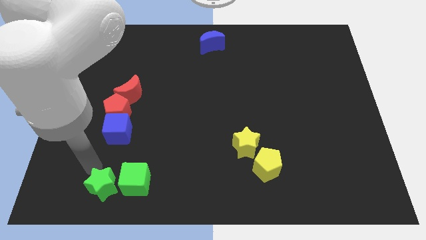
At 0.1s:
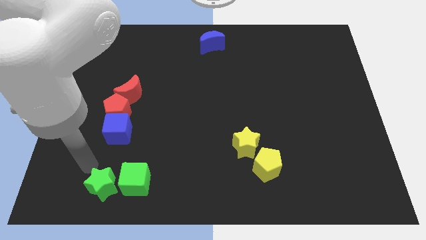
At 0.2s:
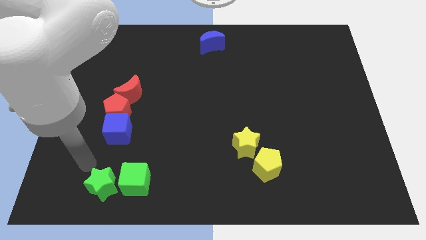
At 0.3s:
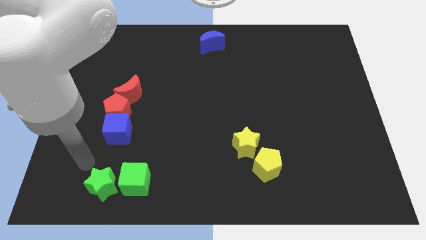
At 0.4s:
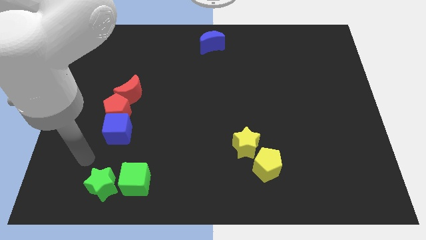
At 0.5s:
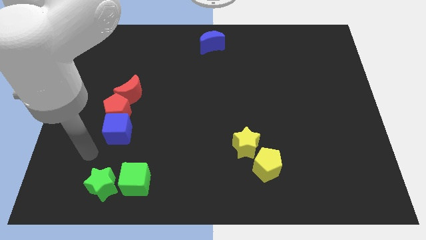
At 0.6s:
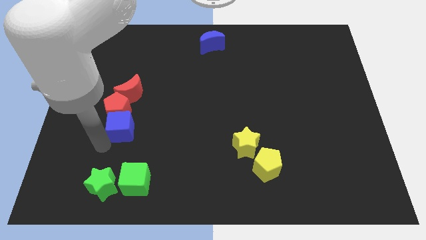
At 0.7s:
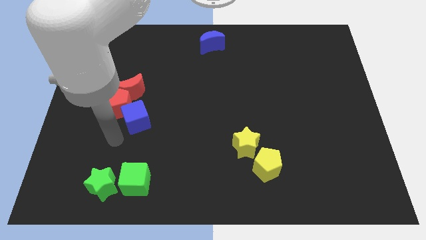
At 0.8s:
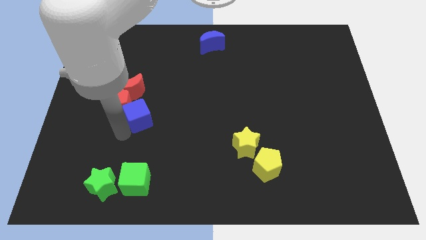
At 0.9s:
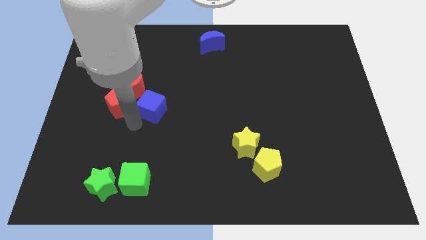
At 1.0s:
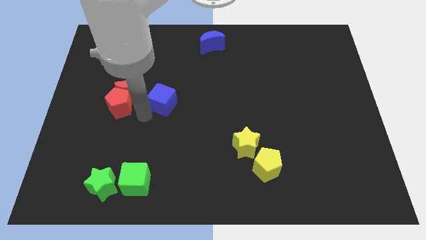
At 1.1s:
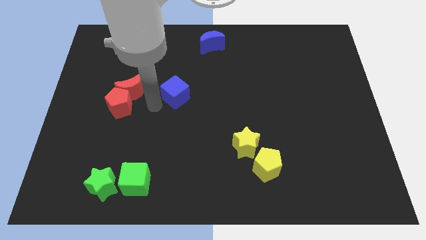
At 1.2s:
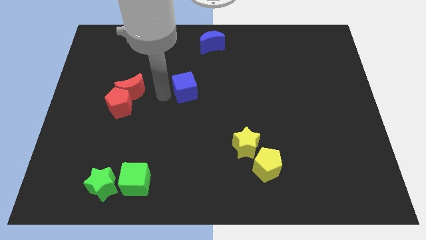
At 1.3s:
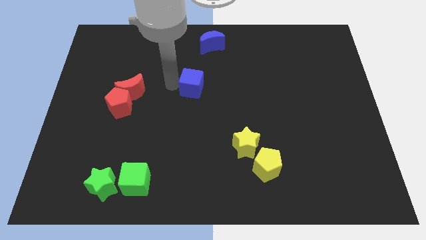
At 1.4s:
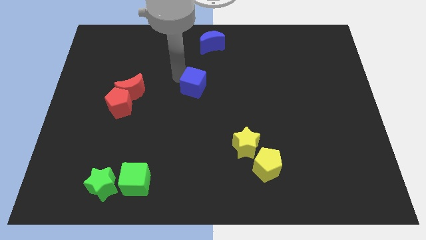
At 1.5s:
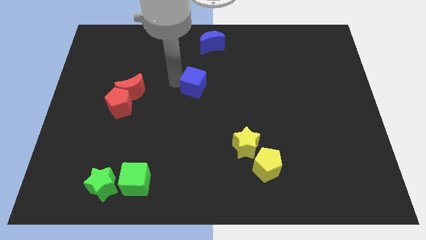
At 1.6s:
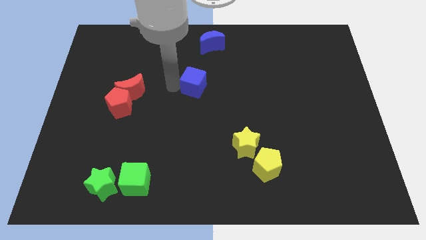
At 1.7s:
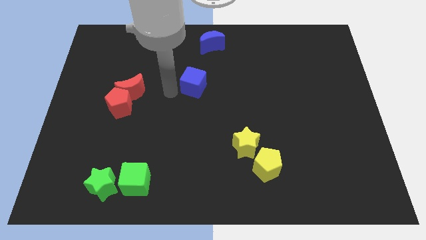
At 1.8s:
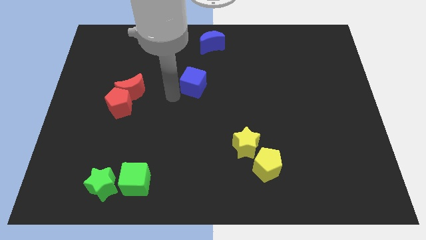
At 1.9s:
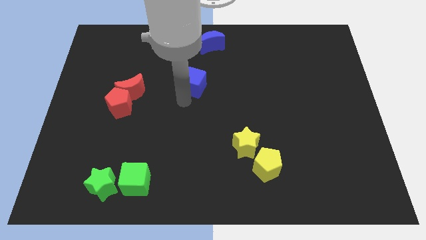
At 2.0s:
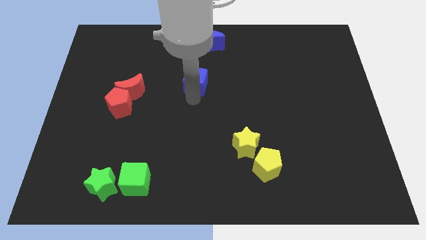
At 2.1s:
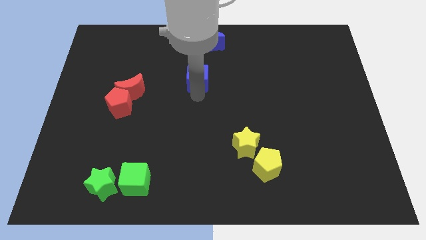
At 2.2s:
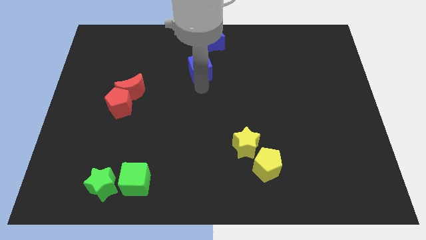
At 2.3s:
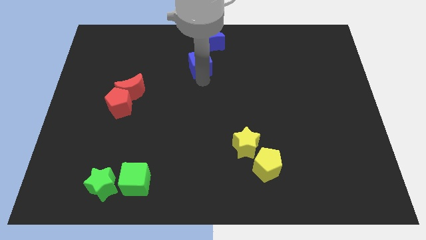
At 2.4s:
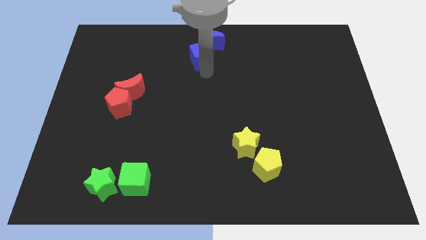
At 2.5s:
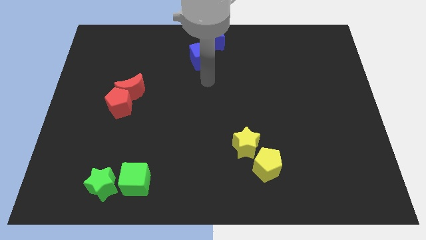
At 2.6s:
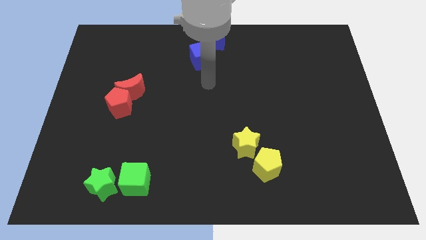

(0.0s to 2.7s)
separate the blue cube from red pentagon towards the top

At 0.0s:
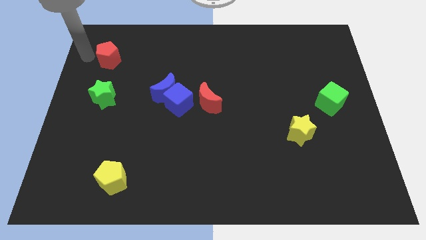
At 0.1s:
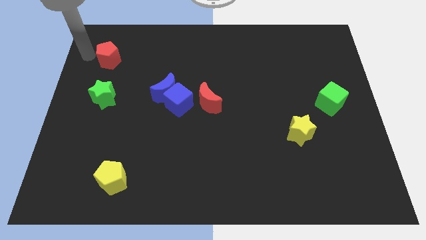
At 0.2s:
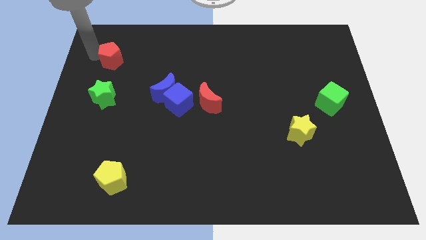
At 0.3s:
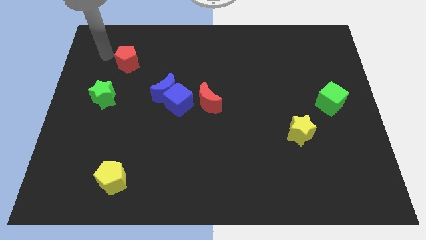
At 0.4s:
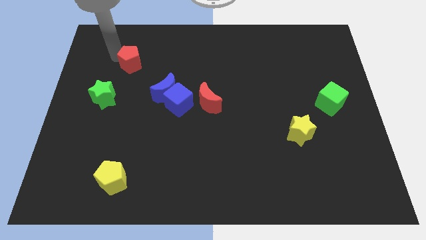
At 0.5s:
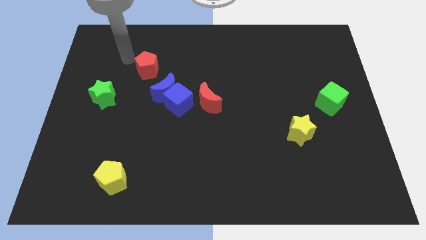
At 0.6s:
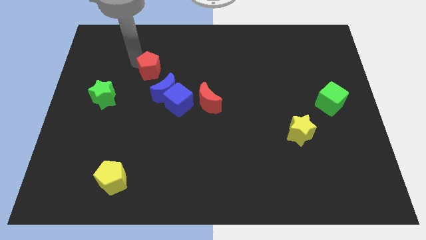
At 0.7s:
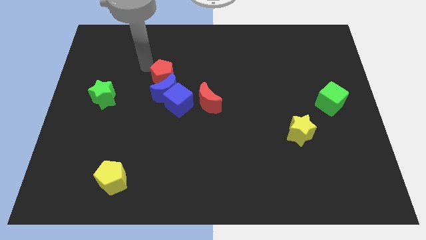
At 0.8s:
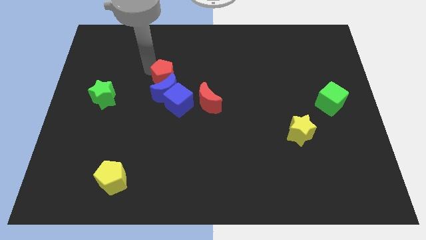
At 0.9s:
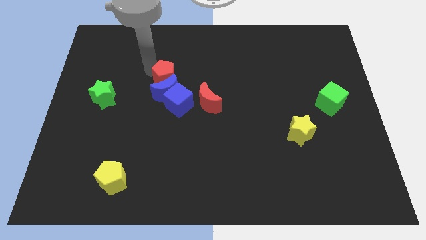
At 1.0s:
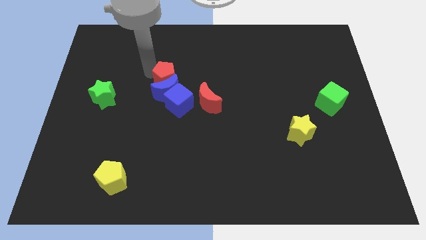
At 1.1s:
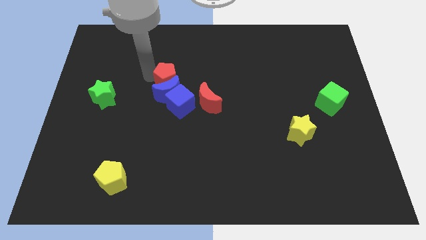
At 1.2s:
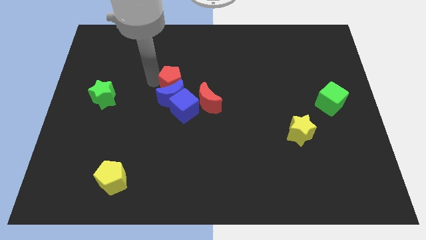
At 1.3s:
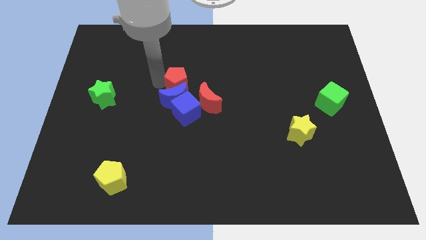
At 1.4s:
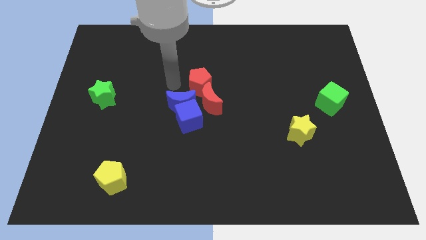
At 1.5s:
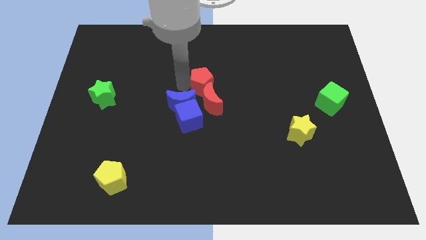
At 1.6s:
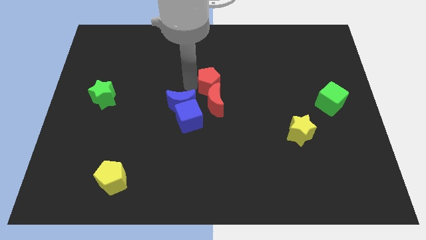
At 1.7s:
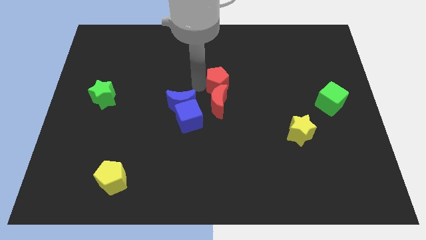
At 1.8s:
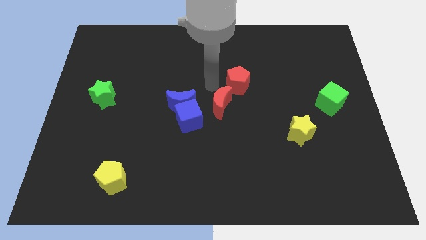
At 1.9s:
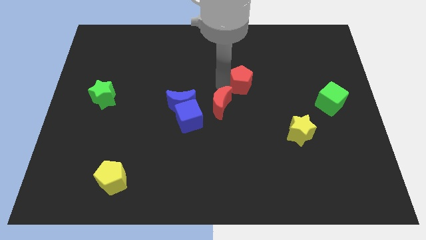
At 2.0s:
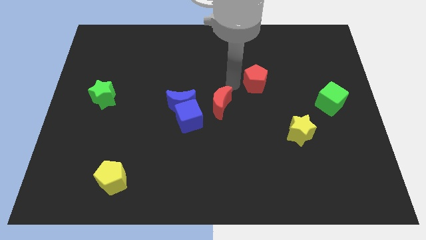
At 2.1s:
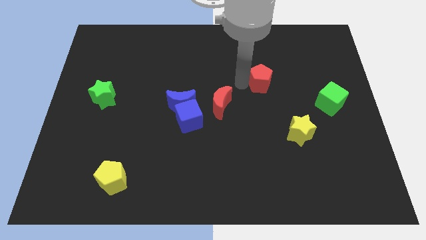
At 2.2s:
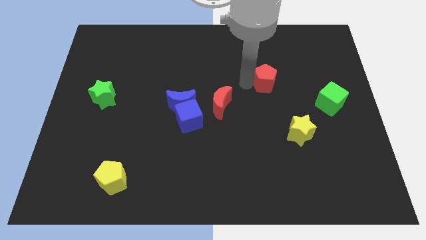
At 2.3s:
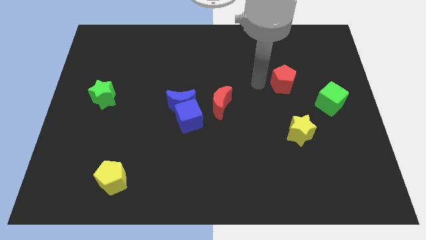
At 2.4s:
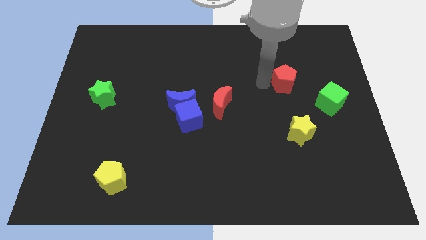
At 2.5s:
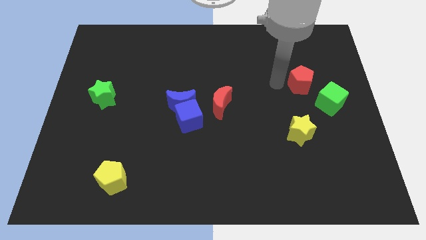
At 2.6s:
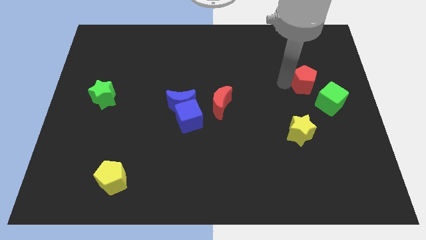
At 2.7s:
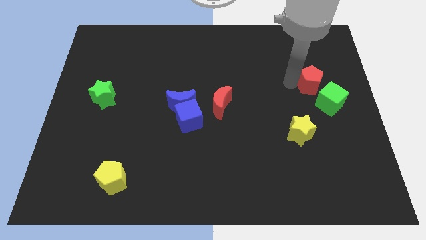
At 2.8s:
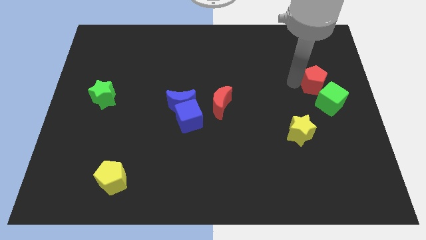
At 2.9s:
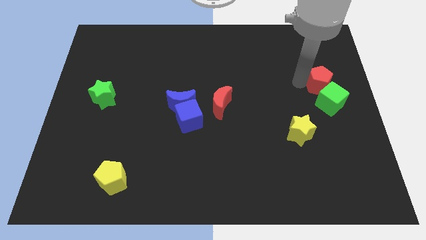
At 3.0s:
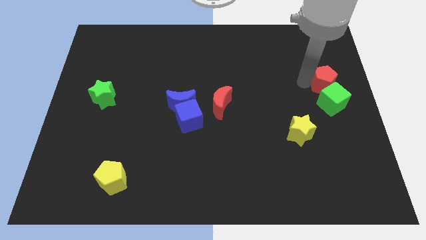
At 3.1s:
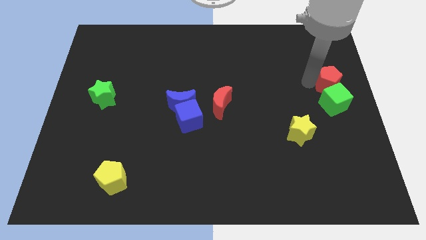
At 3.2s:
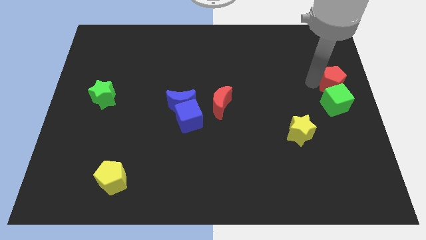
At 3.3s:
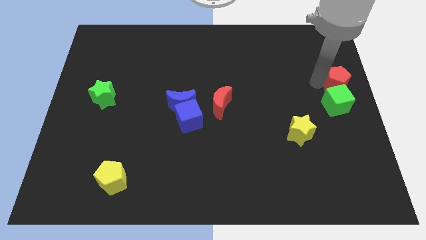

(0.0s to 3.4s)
push the red pentagon to the top of the green cube

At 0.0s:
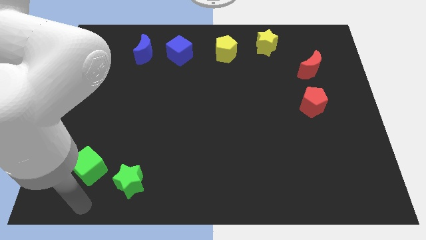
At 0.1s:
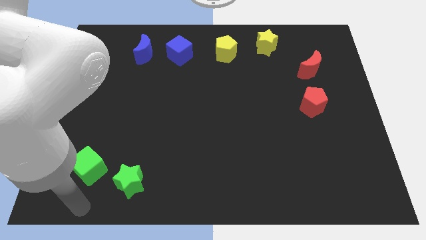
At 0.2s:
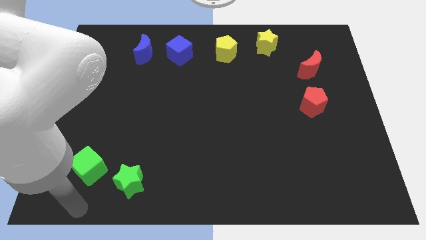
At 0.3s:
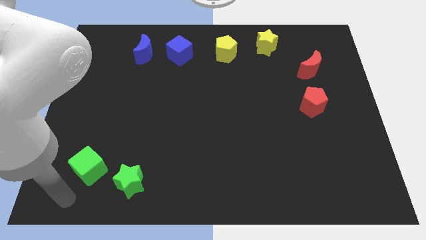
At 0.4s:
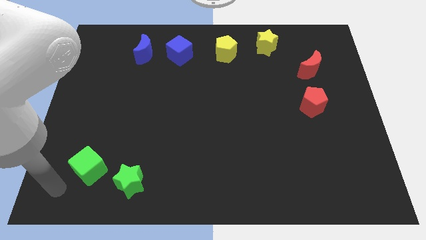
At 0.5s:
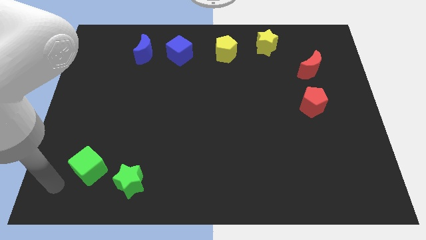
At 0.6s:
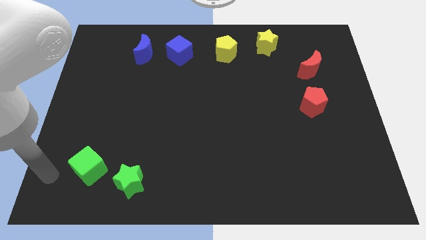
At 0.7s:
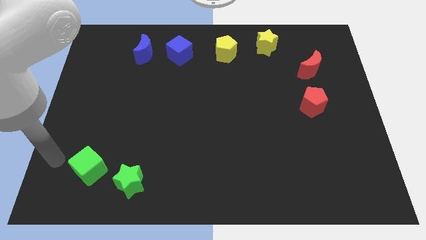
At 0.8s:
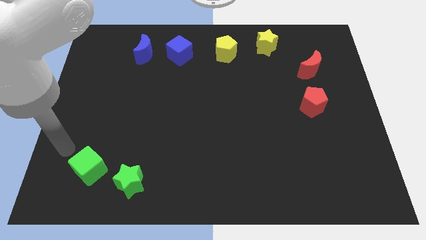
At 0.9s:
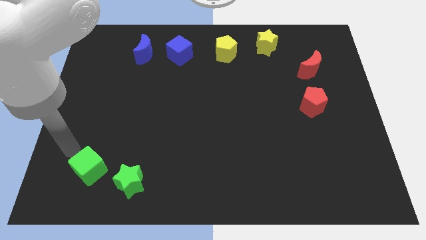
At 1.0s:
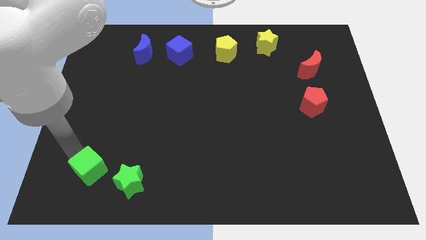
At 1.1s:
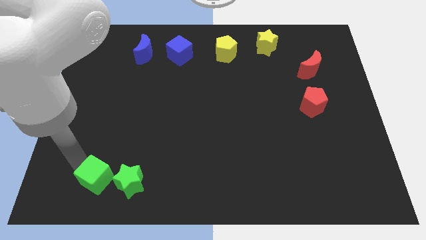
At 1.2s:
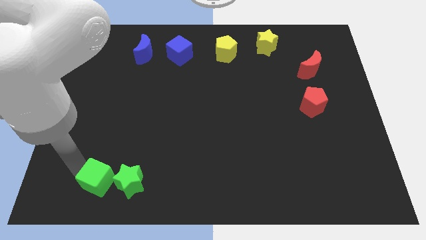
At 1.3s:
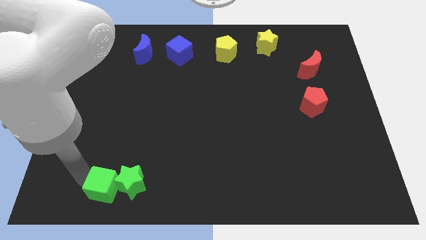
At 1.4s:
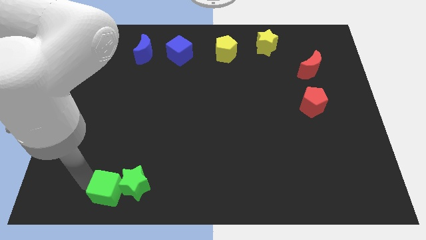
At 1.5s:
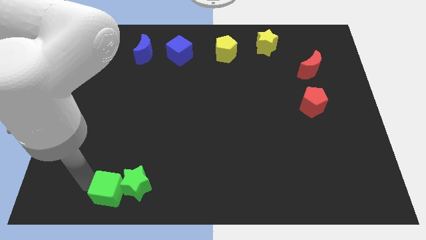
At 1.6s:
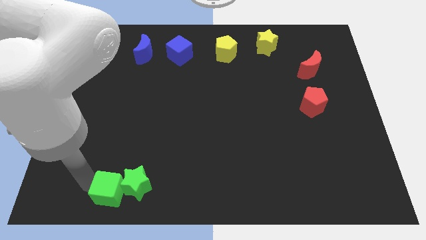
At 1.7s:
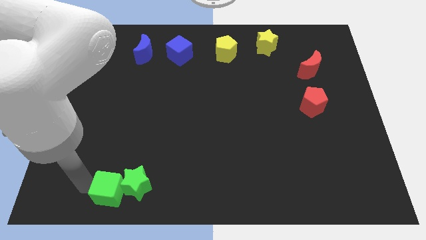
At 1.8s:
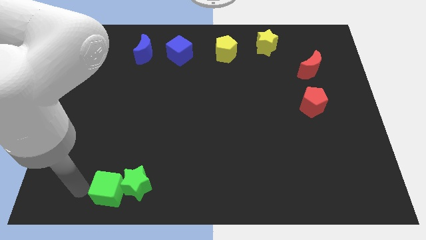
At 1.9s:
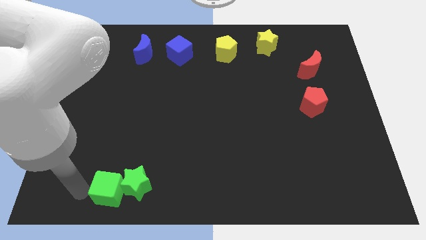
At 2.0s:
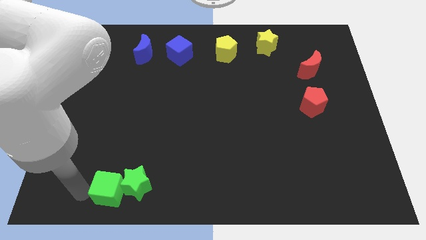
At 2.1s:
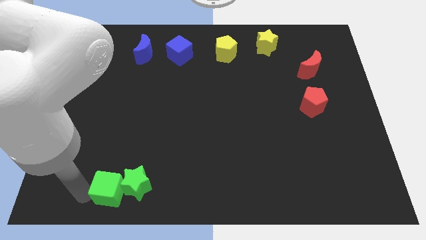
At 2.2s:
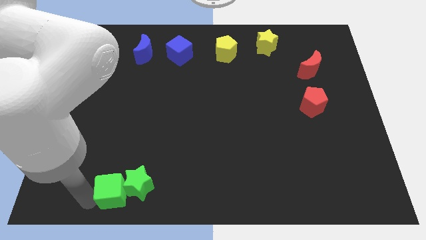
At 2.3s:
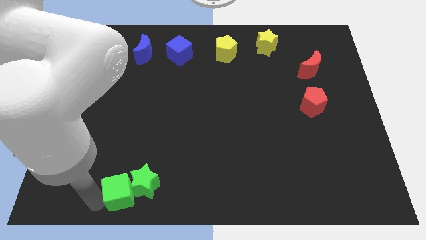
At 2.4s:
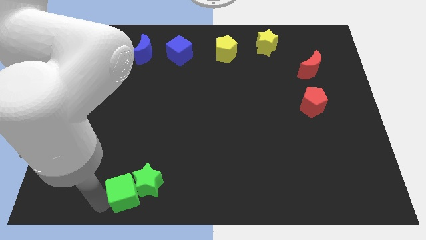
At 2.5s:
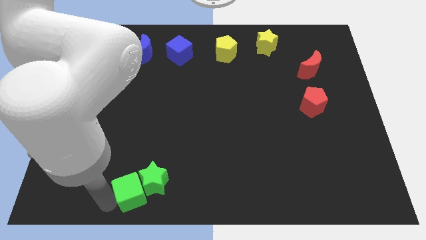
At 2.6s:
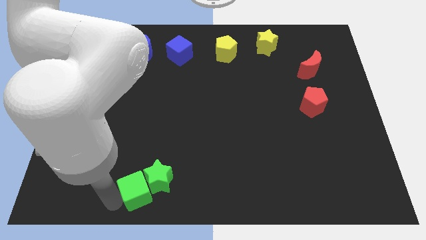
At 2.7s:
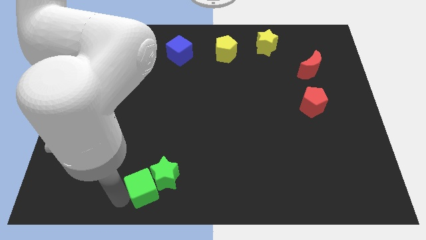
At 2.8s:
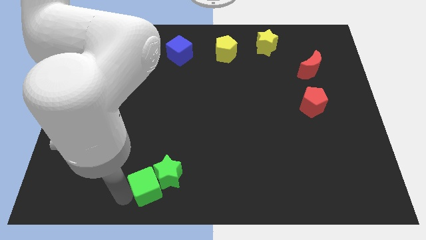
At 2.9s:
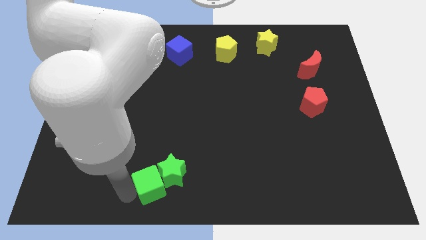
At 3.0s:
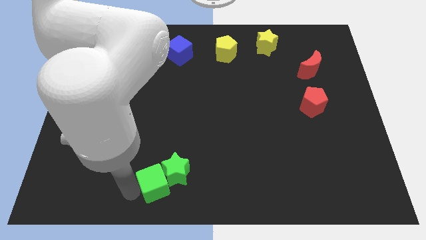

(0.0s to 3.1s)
move the green cube into the green star
